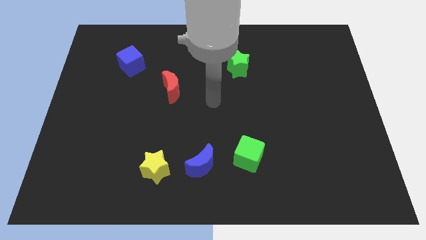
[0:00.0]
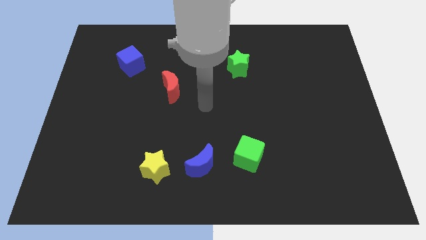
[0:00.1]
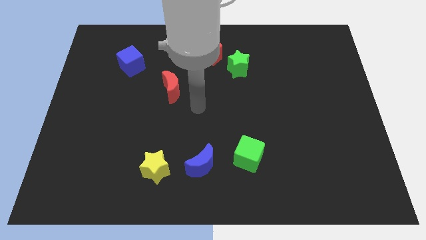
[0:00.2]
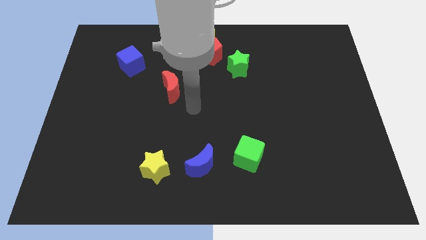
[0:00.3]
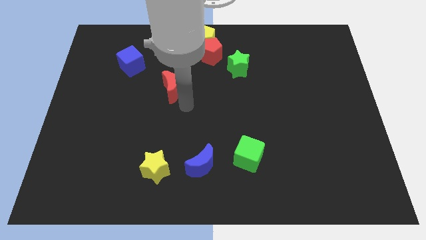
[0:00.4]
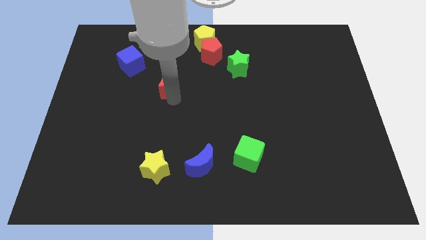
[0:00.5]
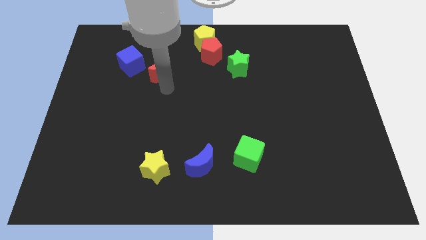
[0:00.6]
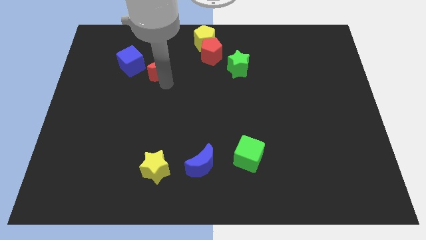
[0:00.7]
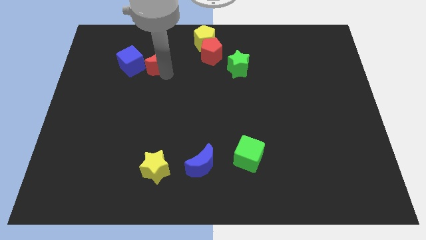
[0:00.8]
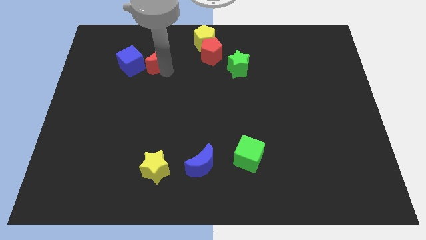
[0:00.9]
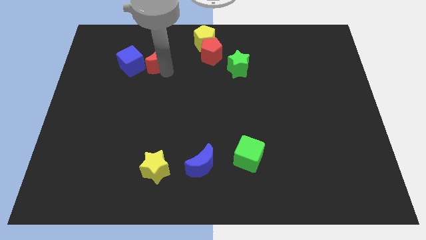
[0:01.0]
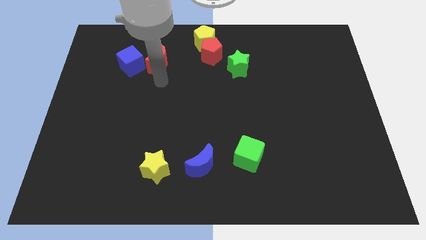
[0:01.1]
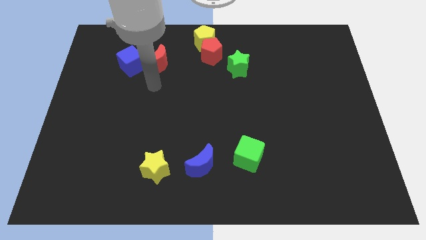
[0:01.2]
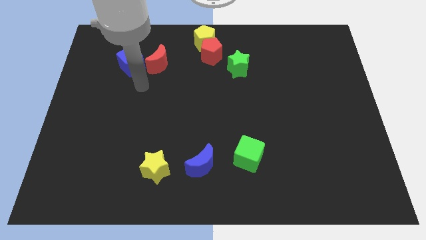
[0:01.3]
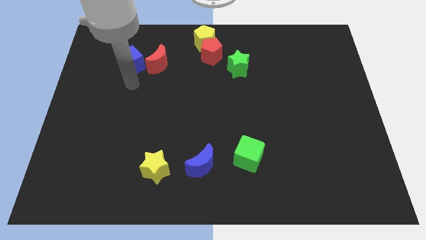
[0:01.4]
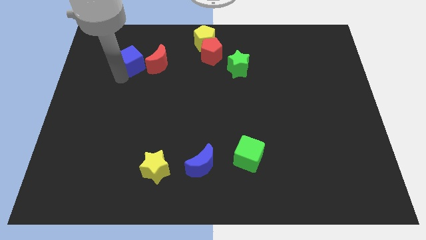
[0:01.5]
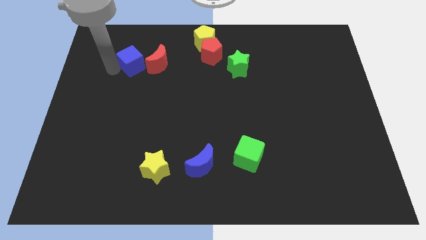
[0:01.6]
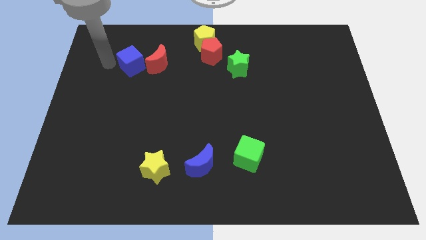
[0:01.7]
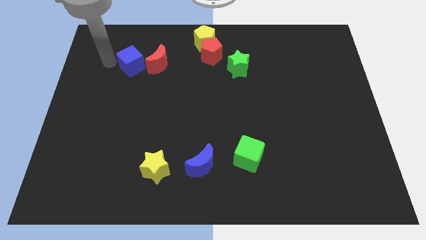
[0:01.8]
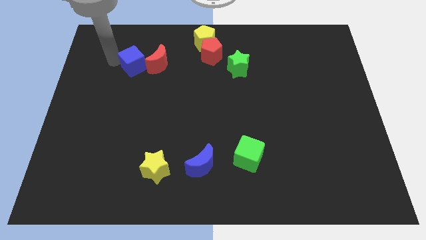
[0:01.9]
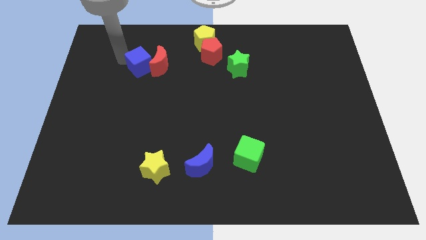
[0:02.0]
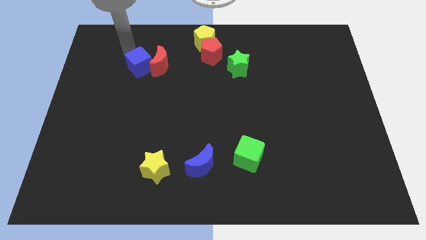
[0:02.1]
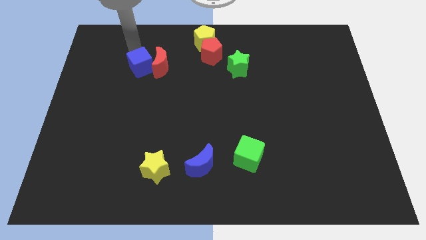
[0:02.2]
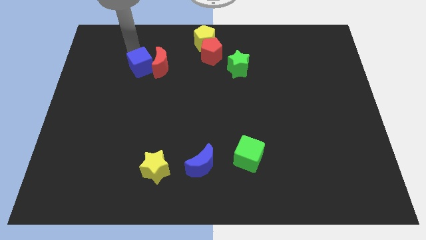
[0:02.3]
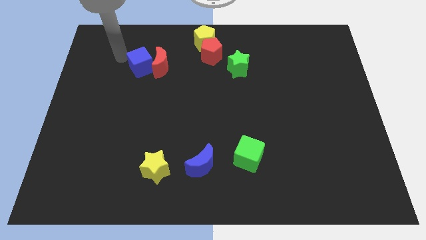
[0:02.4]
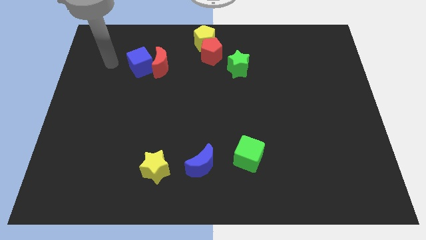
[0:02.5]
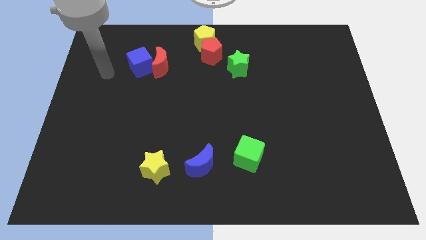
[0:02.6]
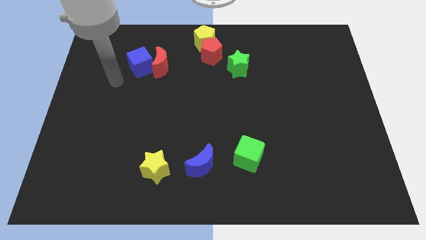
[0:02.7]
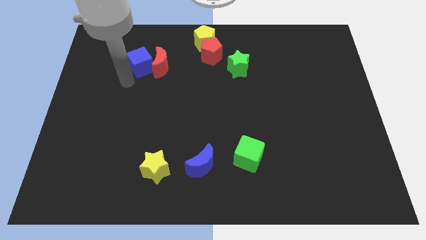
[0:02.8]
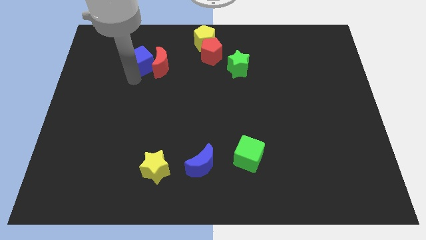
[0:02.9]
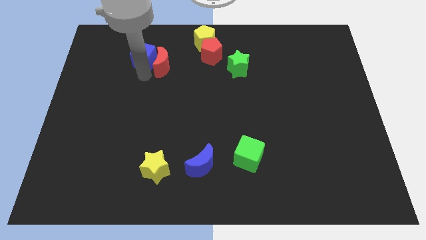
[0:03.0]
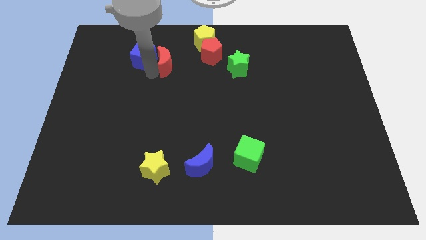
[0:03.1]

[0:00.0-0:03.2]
move the red crescent and the blue cube into each other

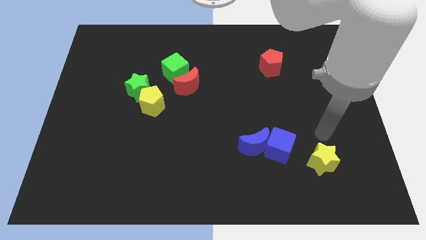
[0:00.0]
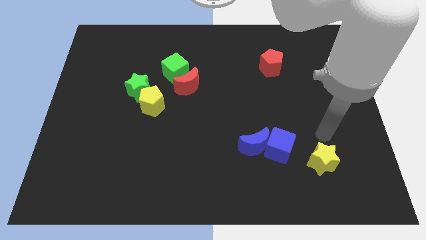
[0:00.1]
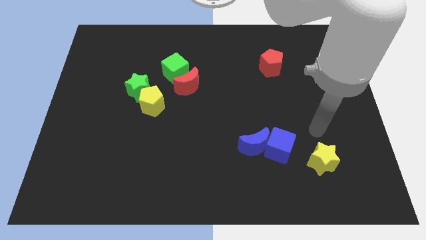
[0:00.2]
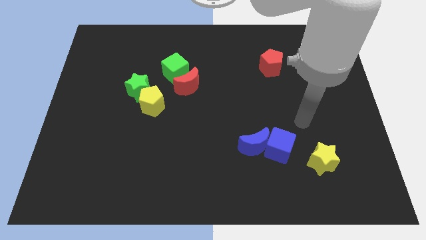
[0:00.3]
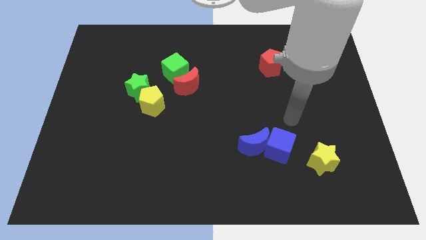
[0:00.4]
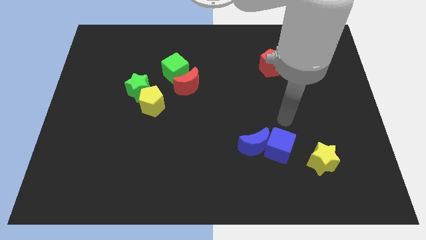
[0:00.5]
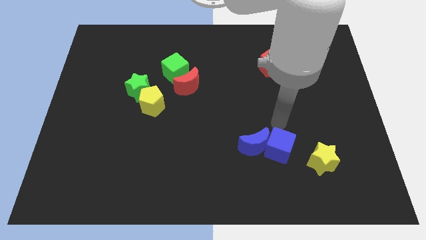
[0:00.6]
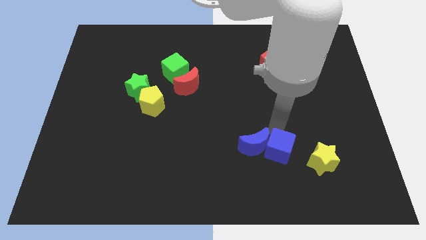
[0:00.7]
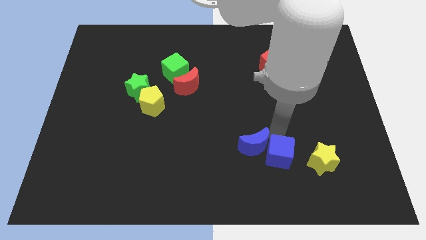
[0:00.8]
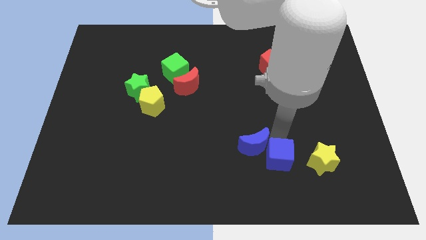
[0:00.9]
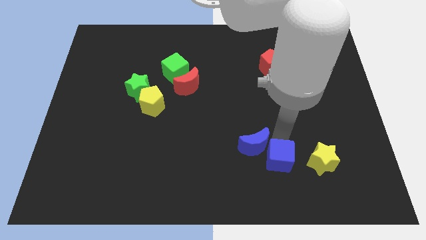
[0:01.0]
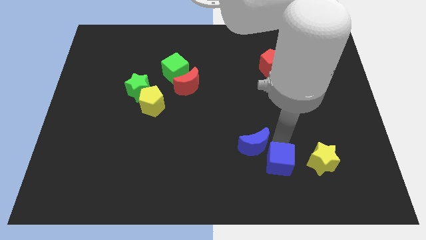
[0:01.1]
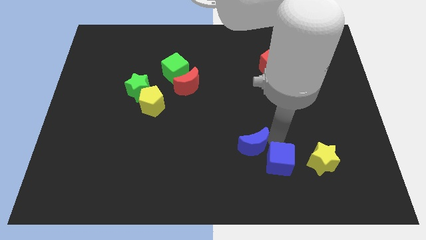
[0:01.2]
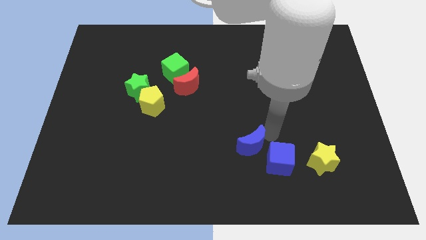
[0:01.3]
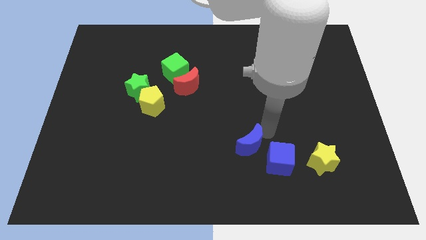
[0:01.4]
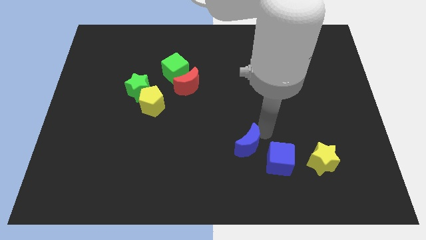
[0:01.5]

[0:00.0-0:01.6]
place yellow star and blue cube in a horizontal line

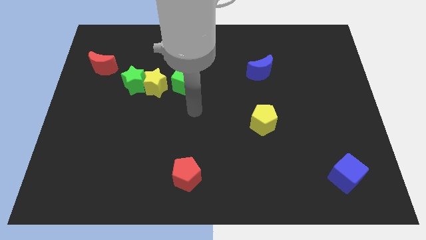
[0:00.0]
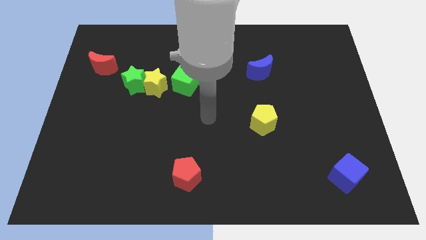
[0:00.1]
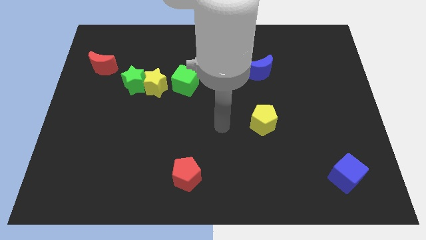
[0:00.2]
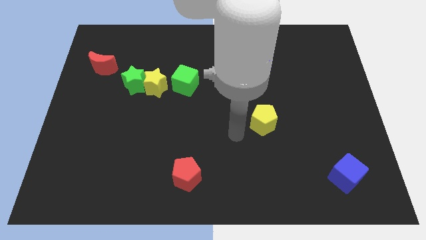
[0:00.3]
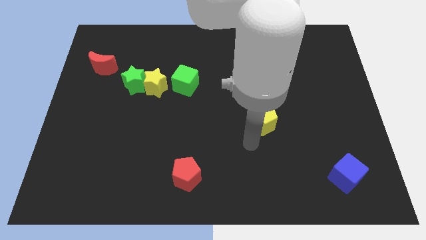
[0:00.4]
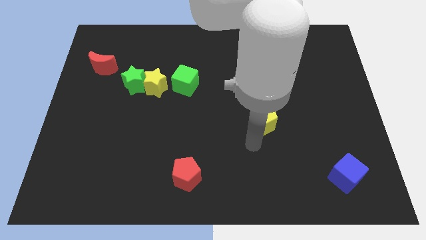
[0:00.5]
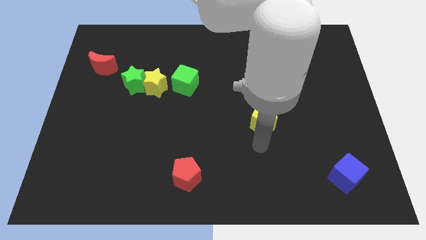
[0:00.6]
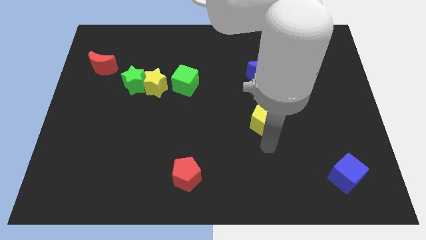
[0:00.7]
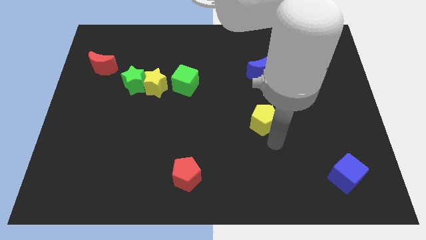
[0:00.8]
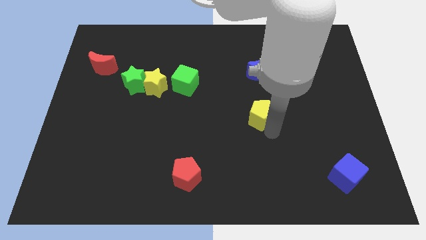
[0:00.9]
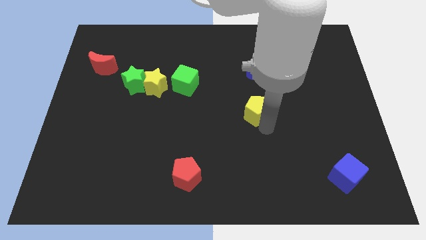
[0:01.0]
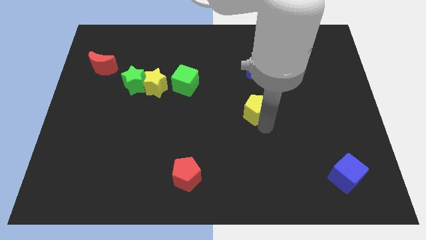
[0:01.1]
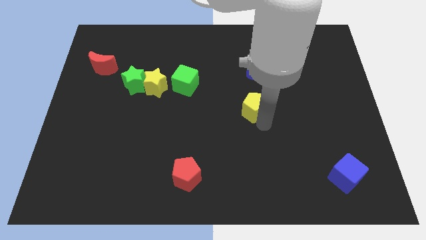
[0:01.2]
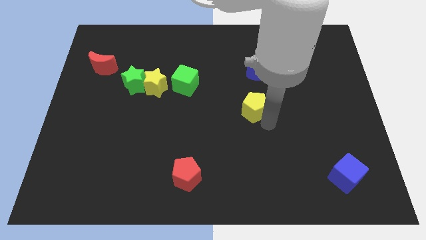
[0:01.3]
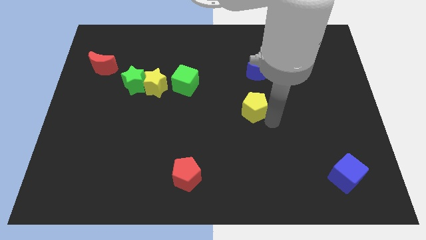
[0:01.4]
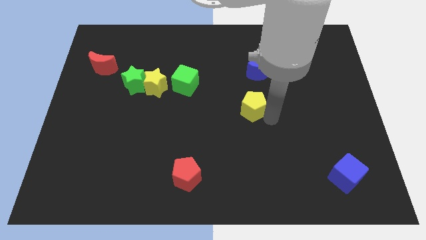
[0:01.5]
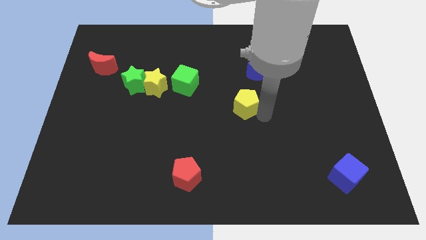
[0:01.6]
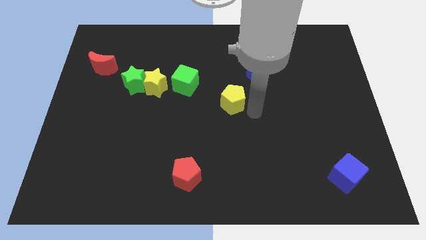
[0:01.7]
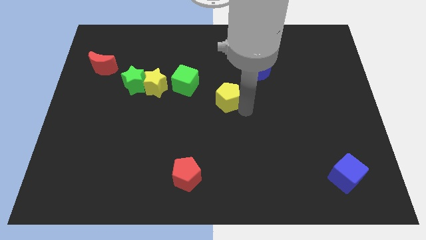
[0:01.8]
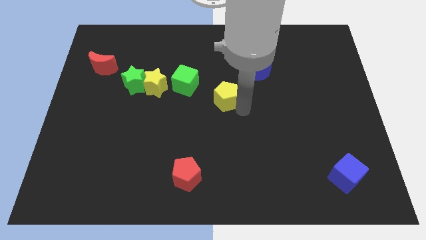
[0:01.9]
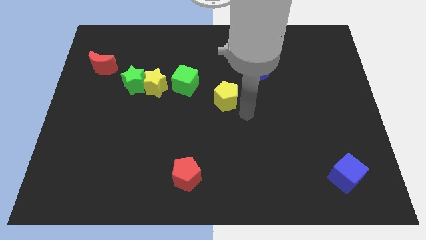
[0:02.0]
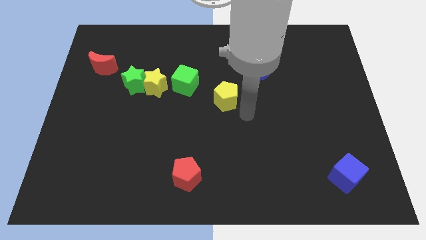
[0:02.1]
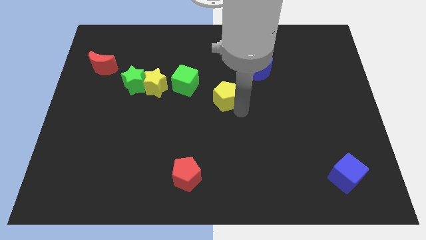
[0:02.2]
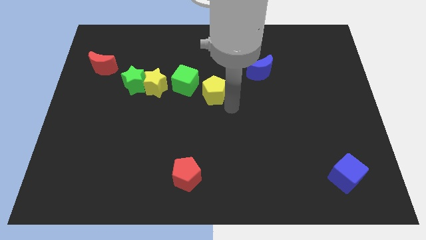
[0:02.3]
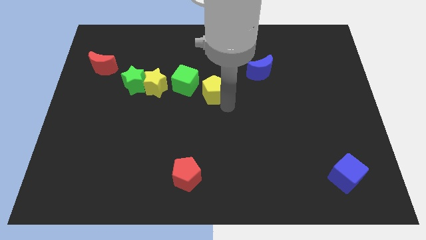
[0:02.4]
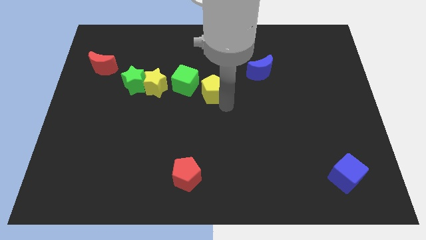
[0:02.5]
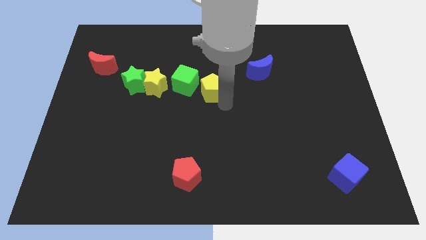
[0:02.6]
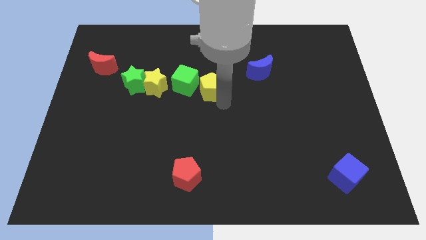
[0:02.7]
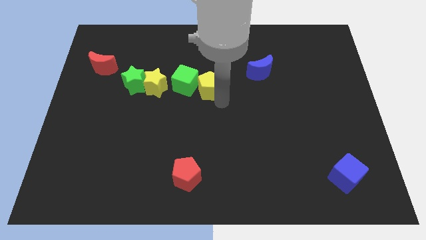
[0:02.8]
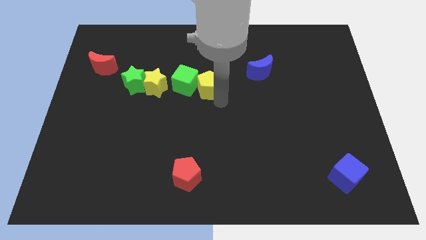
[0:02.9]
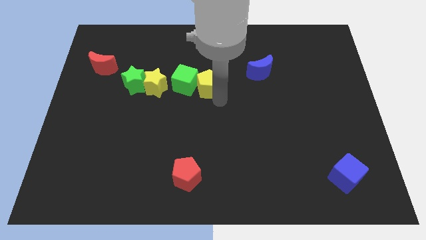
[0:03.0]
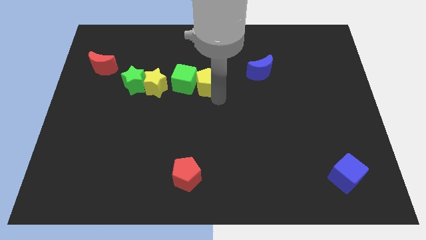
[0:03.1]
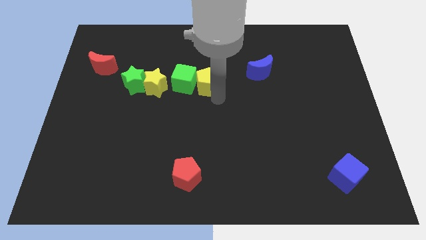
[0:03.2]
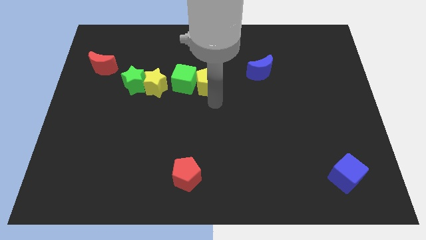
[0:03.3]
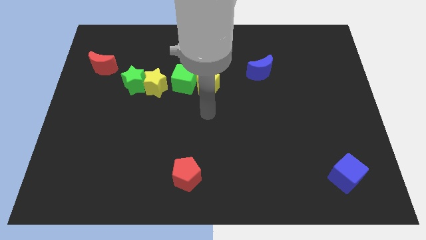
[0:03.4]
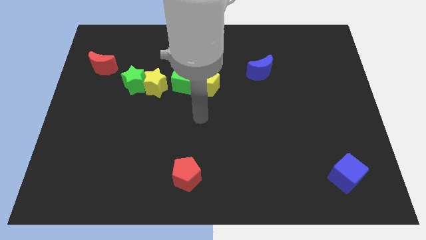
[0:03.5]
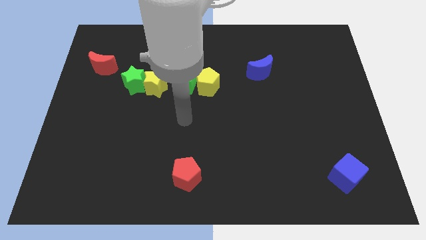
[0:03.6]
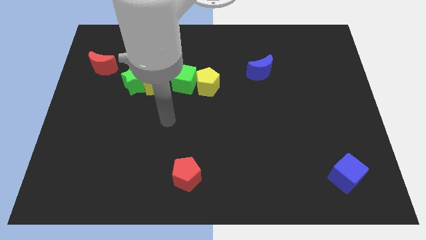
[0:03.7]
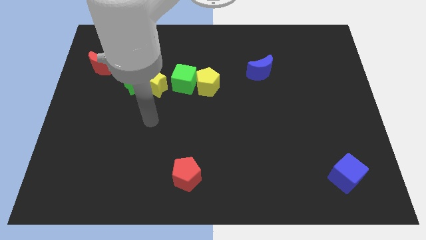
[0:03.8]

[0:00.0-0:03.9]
push yellow pentagon in to green cube

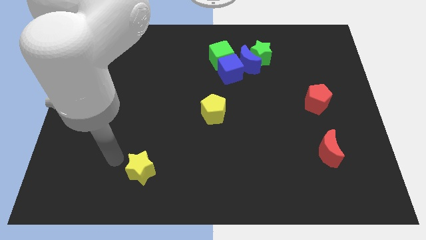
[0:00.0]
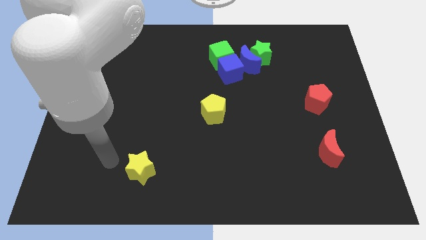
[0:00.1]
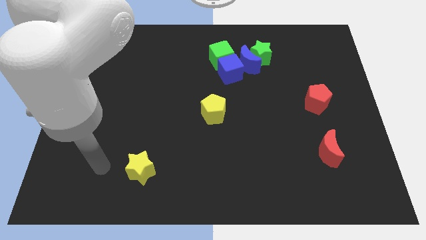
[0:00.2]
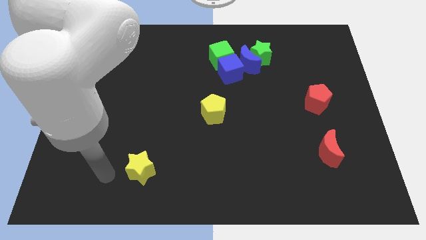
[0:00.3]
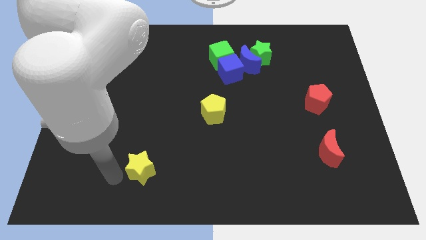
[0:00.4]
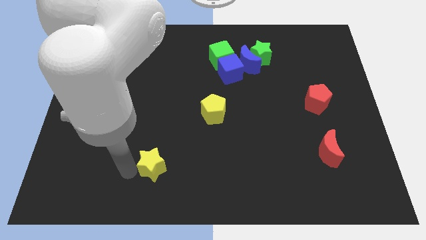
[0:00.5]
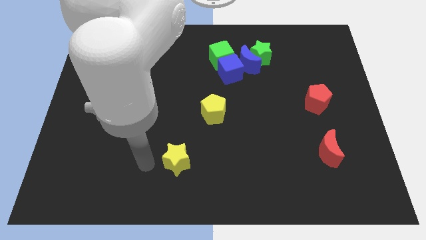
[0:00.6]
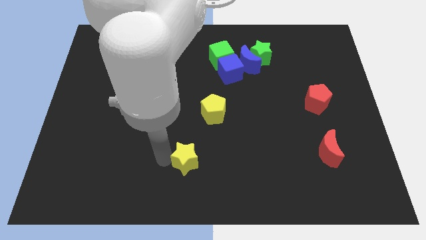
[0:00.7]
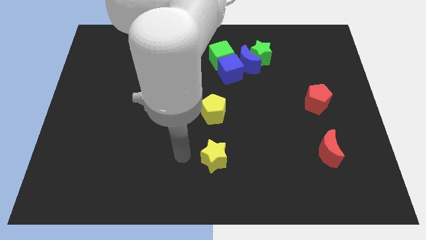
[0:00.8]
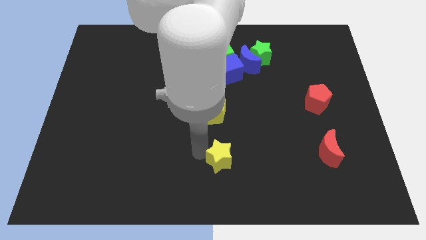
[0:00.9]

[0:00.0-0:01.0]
place the yellow star below the yellow pentagon
